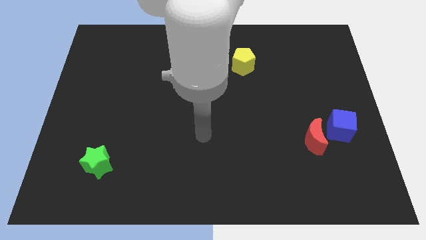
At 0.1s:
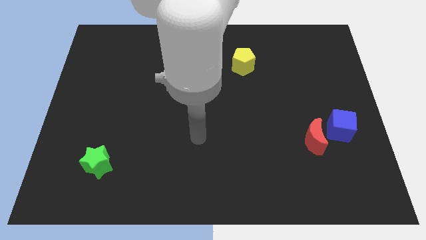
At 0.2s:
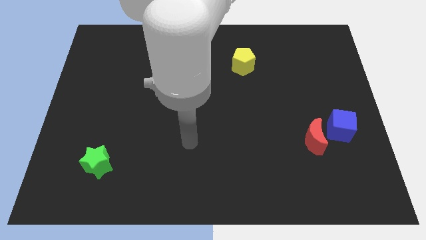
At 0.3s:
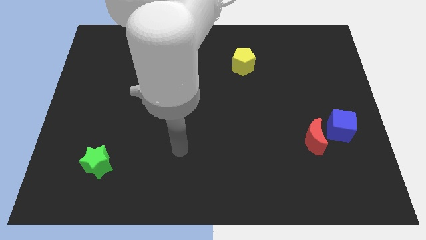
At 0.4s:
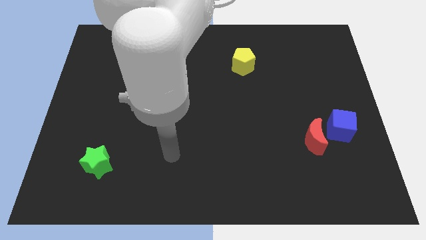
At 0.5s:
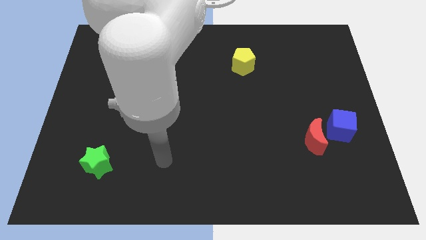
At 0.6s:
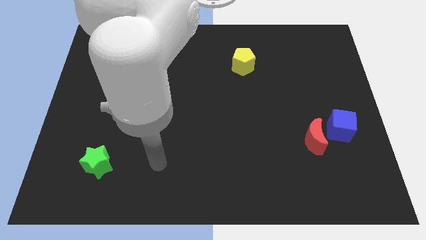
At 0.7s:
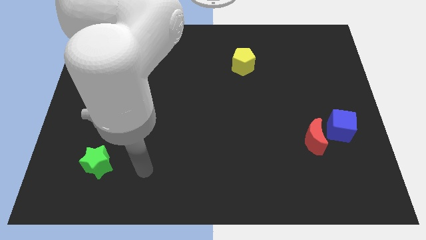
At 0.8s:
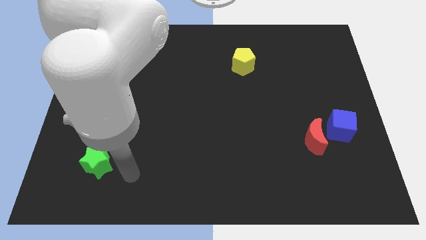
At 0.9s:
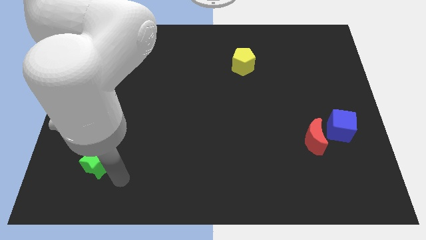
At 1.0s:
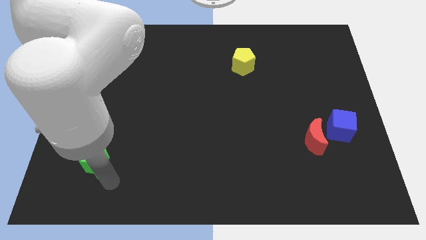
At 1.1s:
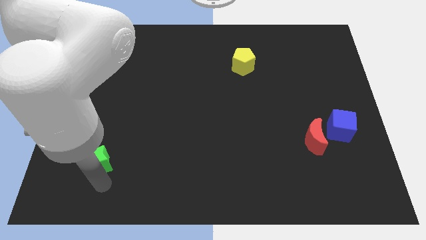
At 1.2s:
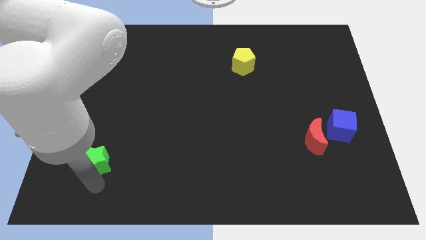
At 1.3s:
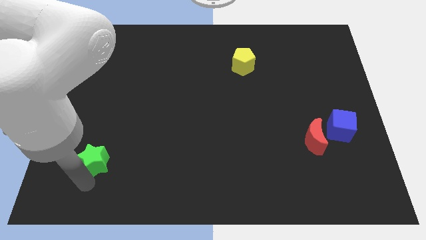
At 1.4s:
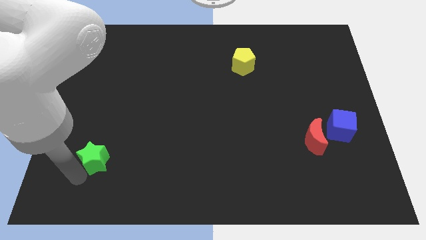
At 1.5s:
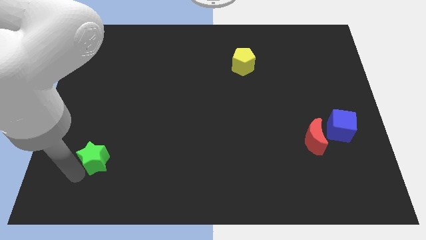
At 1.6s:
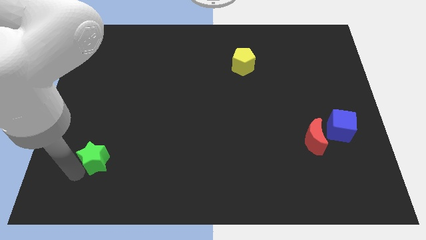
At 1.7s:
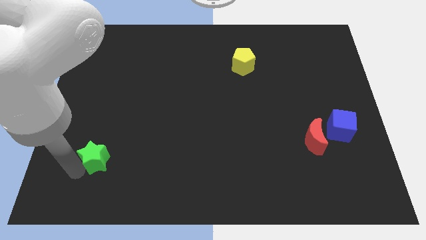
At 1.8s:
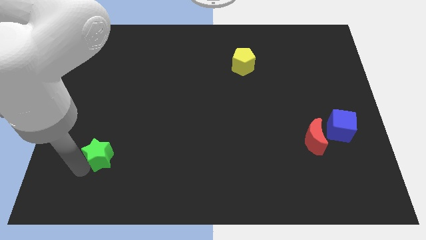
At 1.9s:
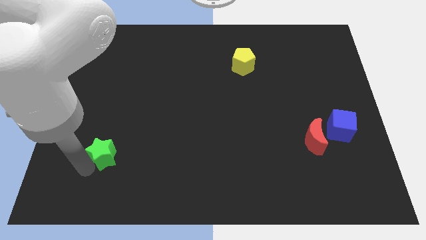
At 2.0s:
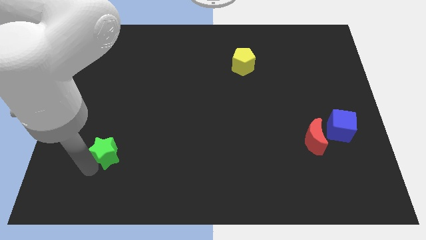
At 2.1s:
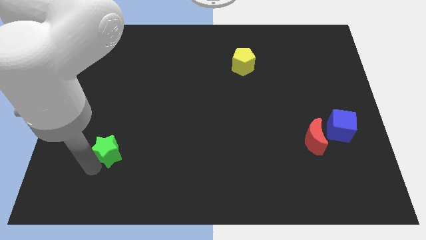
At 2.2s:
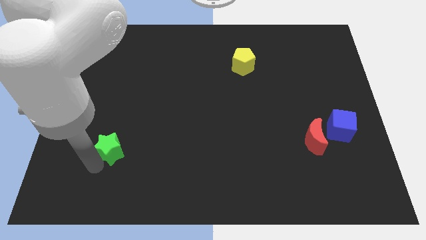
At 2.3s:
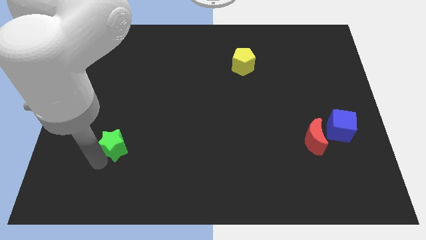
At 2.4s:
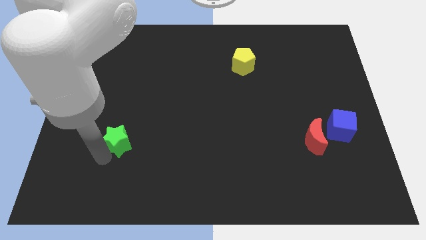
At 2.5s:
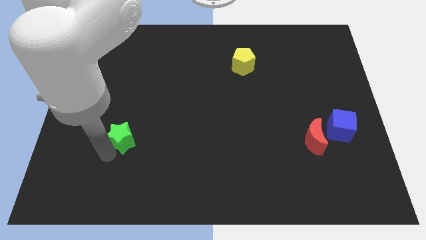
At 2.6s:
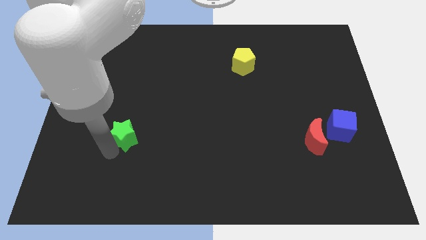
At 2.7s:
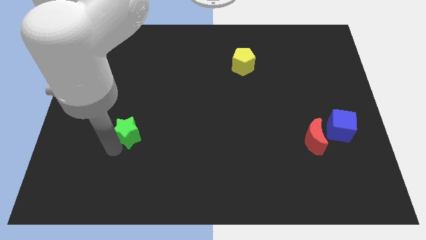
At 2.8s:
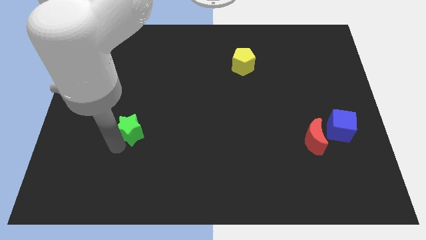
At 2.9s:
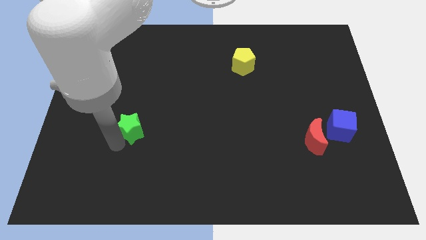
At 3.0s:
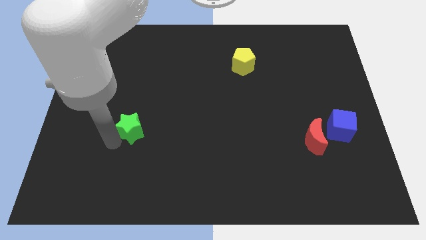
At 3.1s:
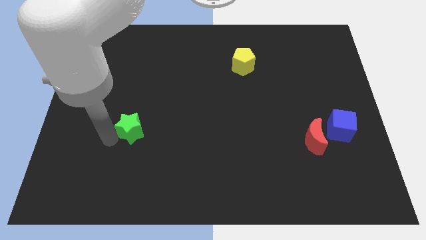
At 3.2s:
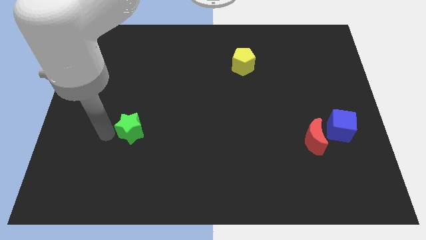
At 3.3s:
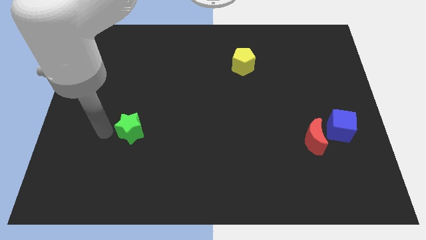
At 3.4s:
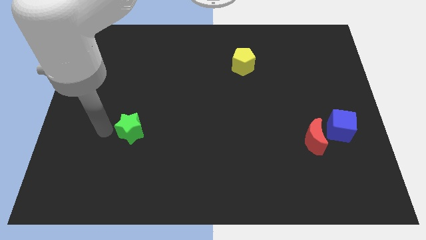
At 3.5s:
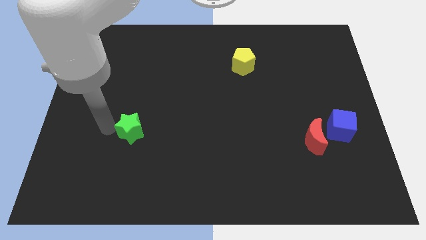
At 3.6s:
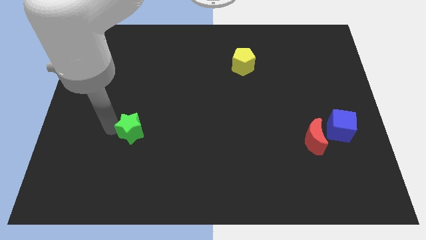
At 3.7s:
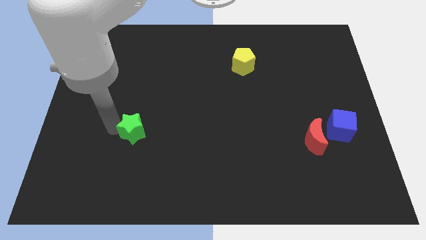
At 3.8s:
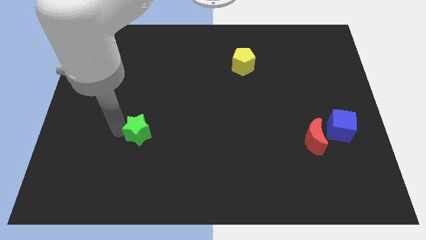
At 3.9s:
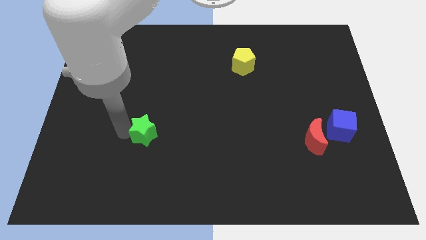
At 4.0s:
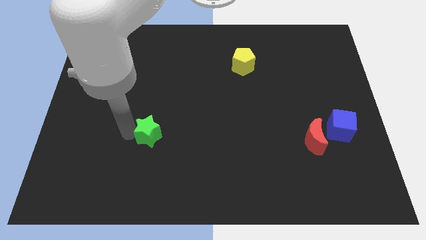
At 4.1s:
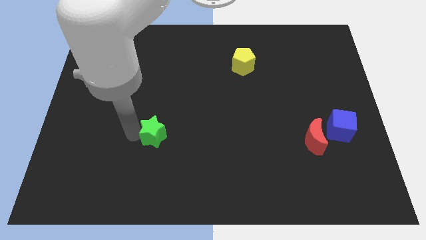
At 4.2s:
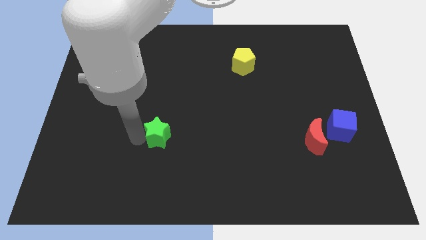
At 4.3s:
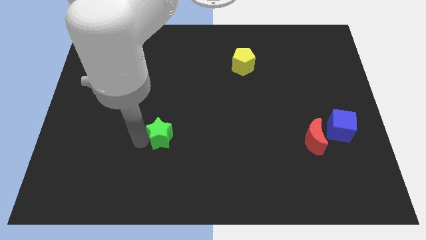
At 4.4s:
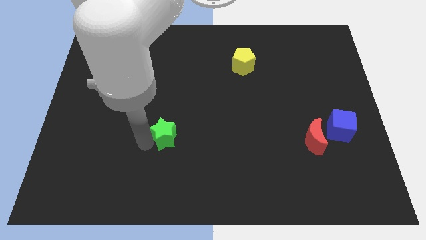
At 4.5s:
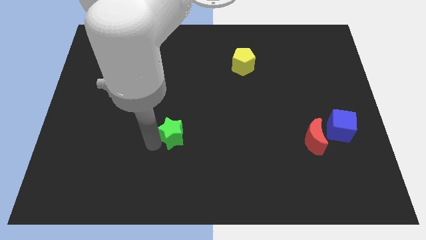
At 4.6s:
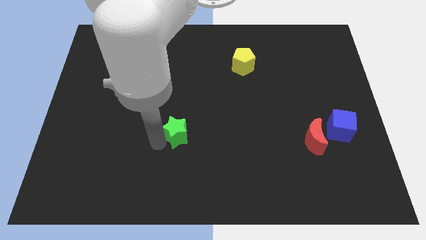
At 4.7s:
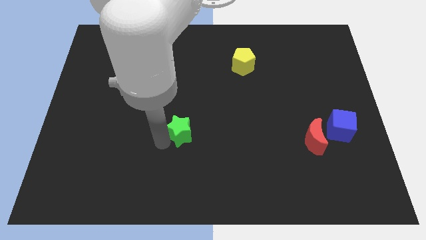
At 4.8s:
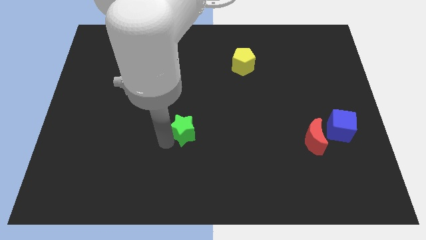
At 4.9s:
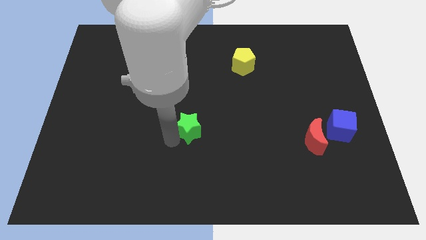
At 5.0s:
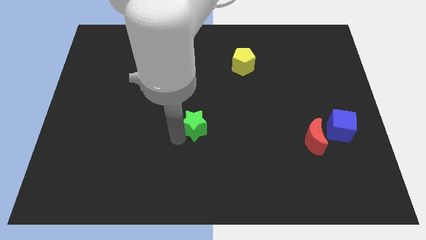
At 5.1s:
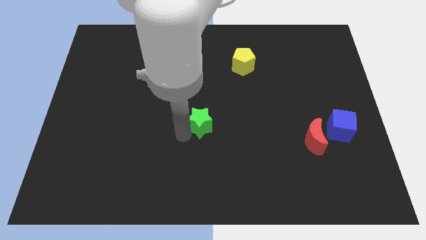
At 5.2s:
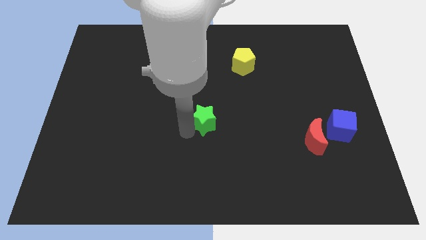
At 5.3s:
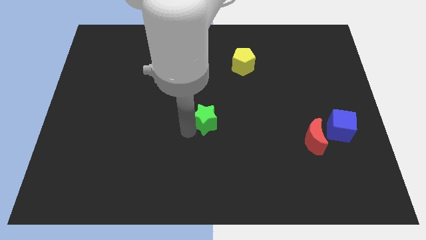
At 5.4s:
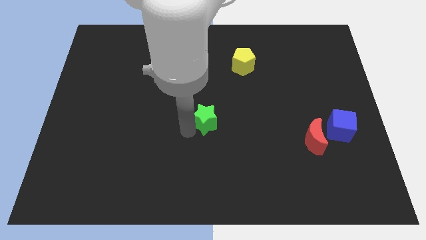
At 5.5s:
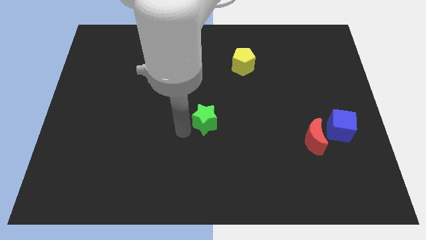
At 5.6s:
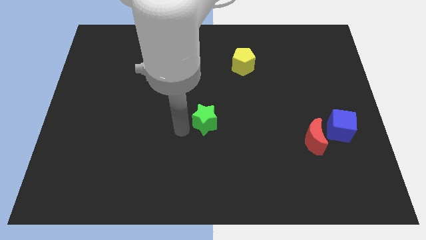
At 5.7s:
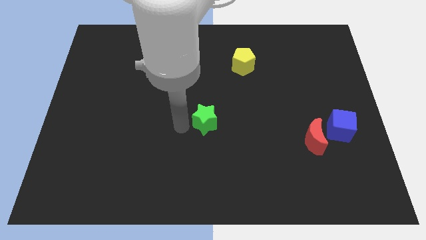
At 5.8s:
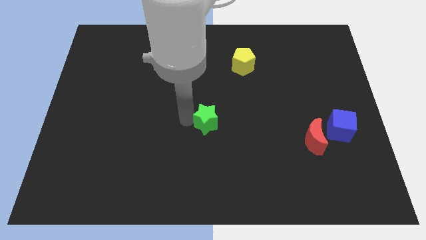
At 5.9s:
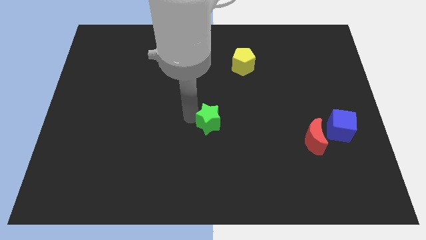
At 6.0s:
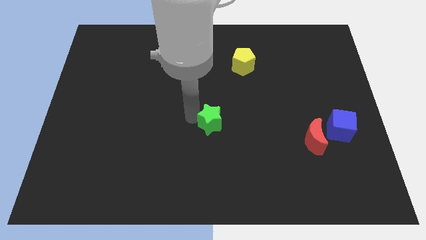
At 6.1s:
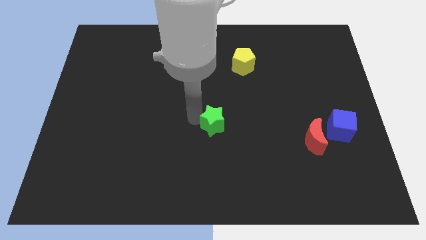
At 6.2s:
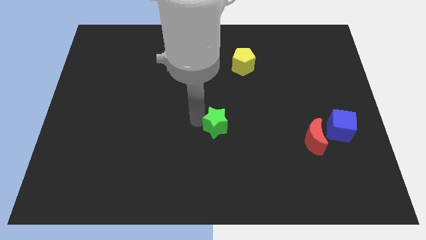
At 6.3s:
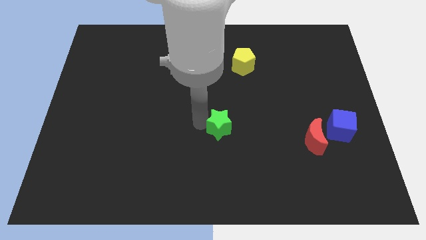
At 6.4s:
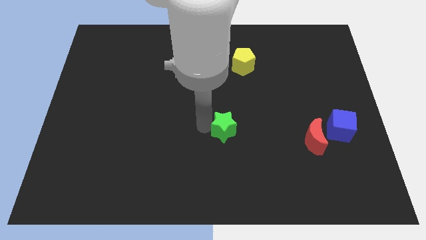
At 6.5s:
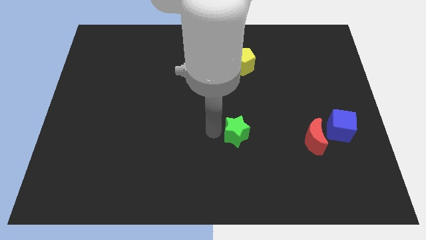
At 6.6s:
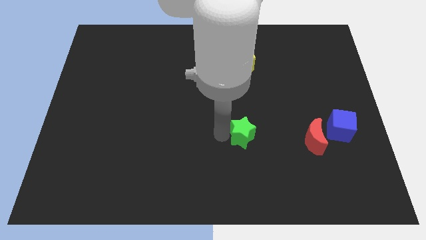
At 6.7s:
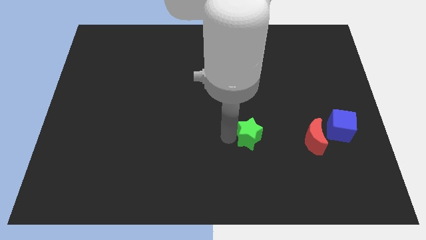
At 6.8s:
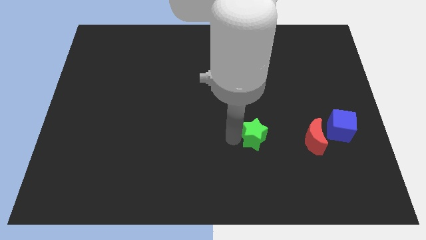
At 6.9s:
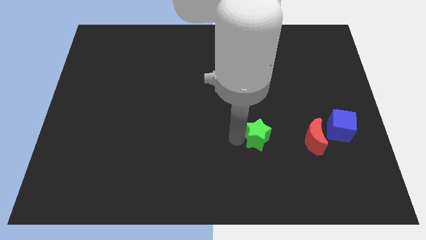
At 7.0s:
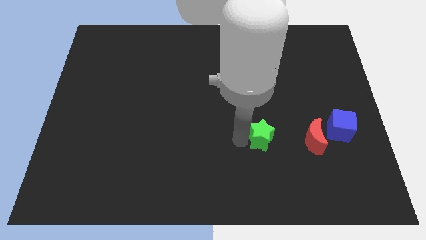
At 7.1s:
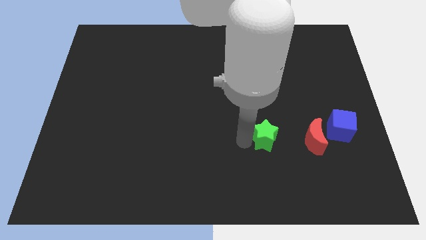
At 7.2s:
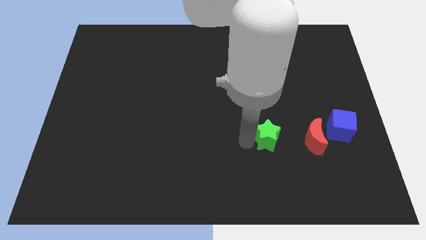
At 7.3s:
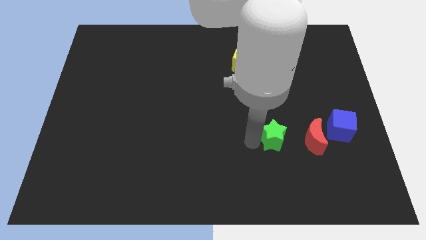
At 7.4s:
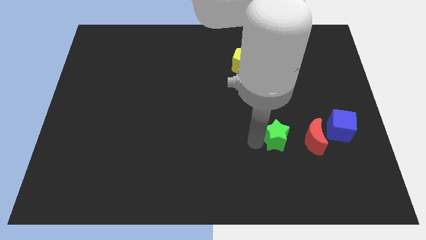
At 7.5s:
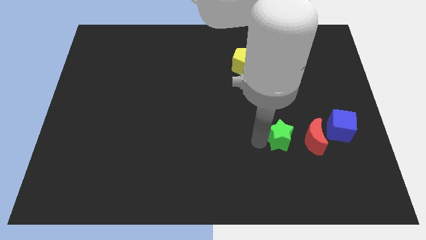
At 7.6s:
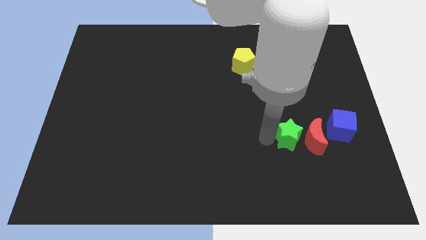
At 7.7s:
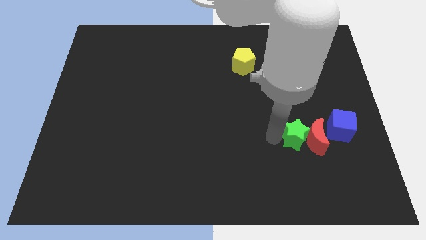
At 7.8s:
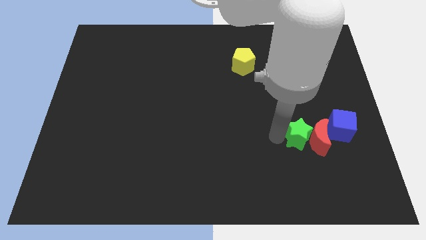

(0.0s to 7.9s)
slide the star next to the red block

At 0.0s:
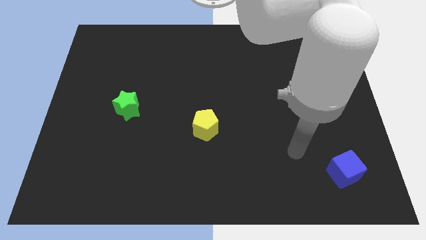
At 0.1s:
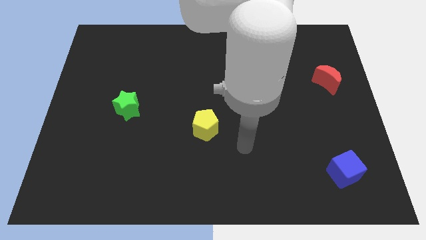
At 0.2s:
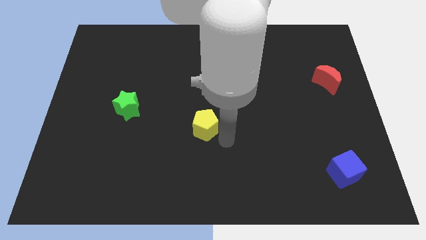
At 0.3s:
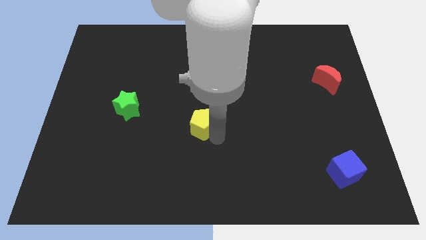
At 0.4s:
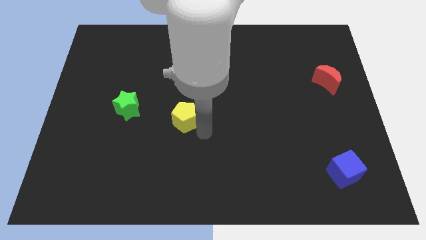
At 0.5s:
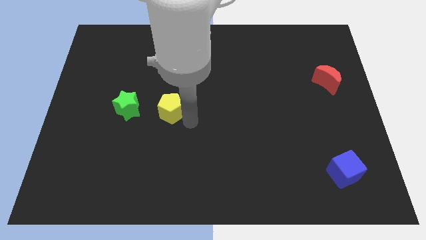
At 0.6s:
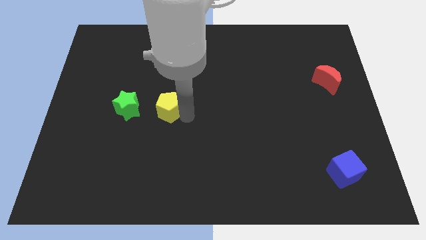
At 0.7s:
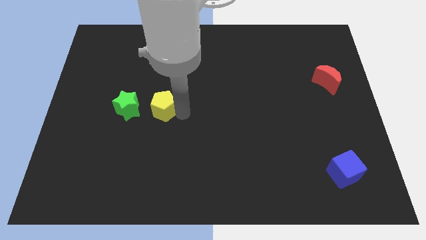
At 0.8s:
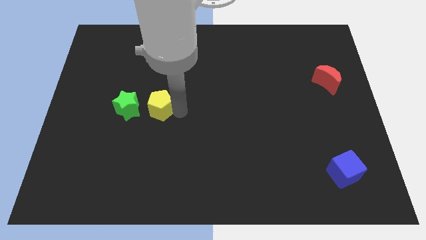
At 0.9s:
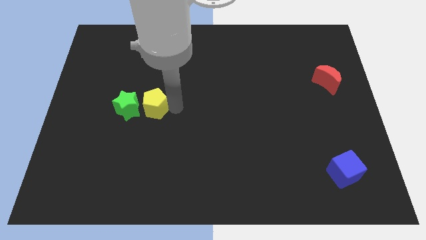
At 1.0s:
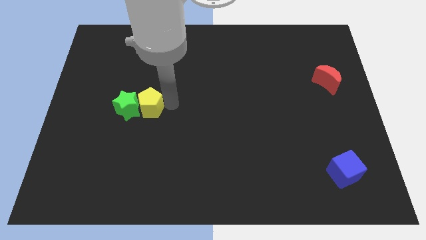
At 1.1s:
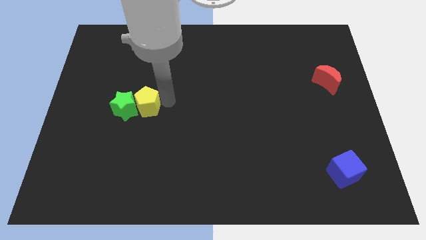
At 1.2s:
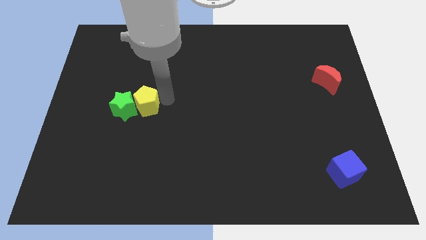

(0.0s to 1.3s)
slide the pentagon next to the green block
